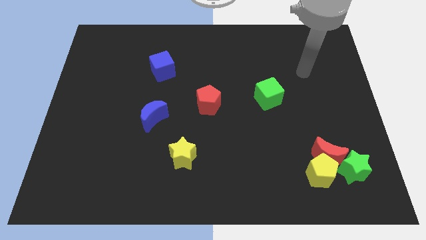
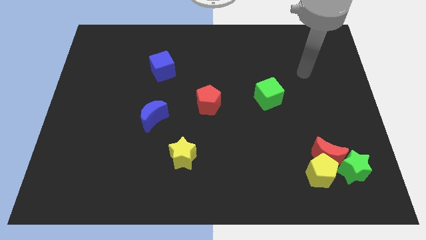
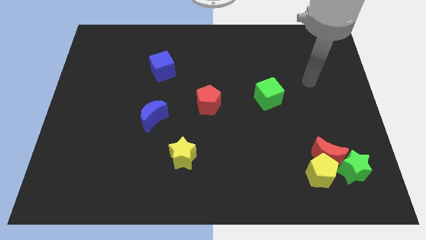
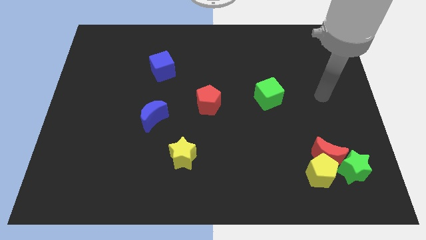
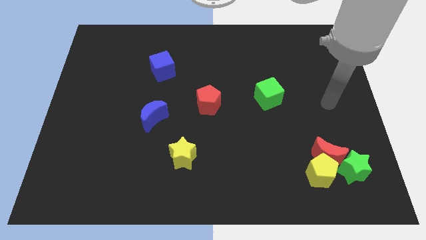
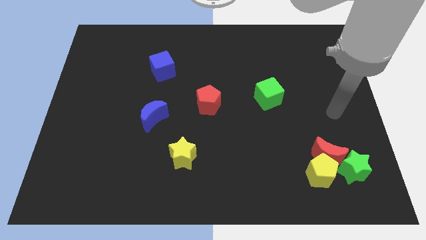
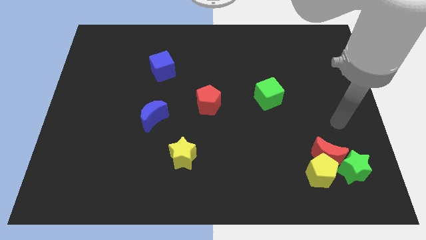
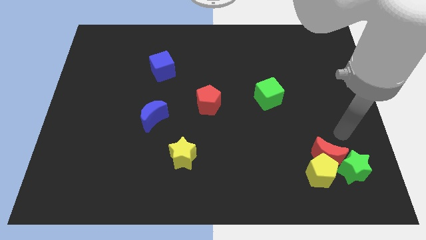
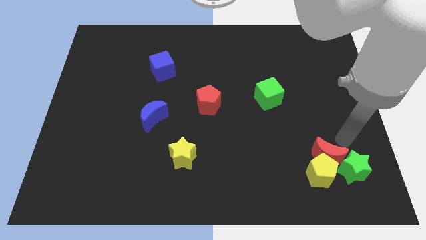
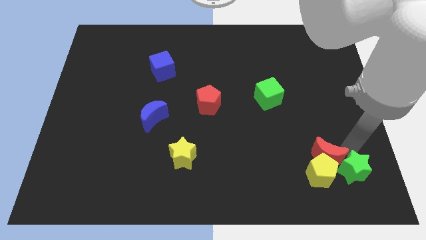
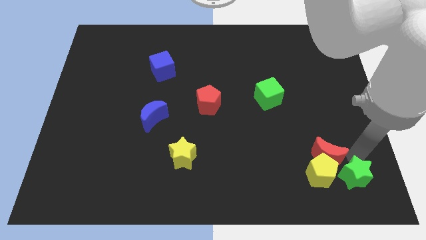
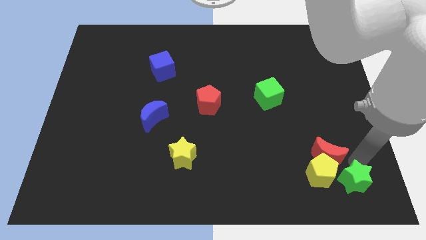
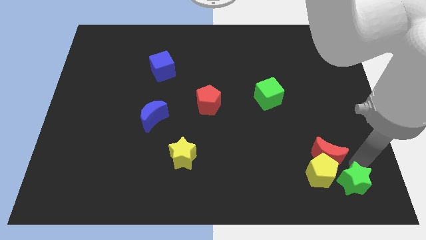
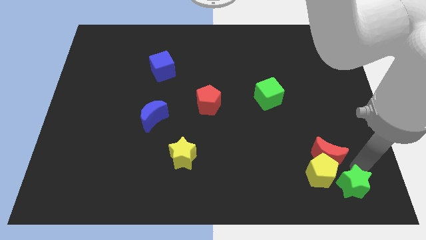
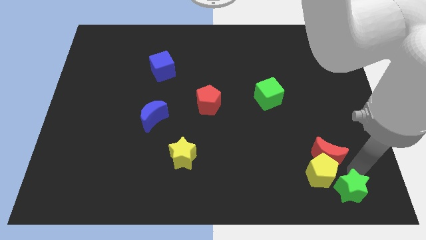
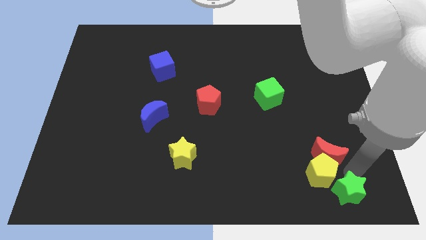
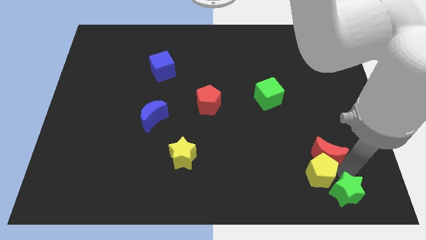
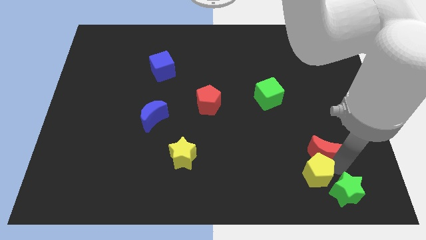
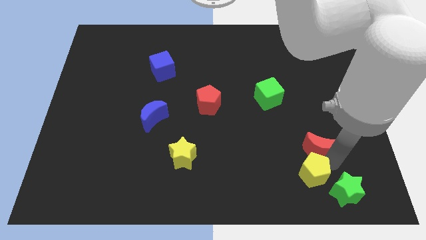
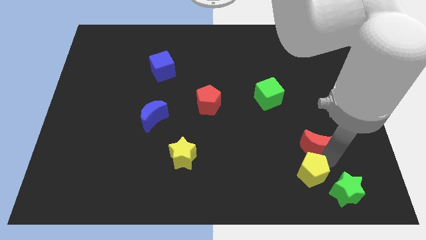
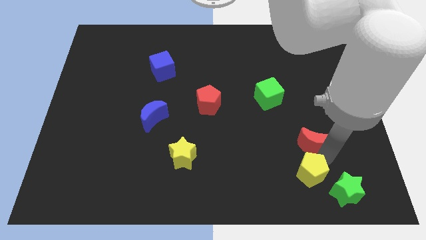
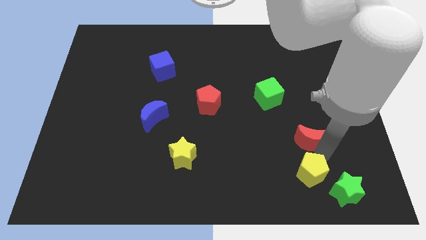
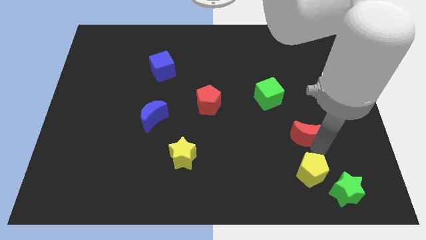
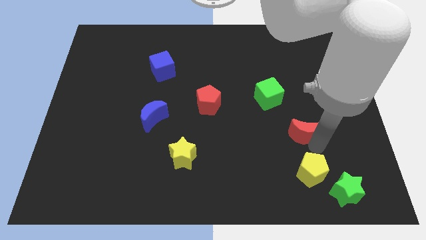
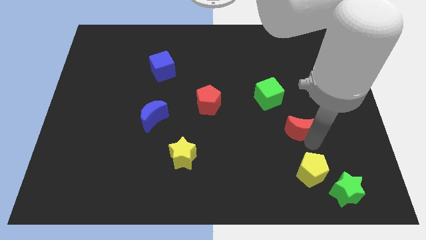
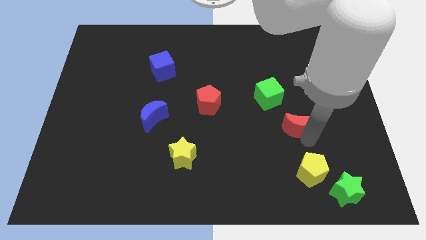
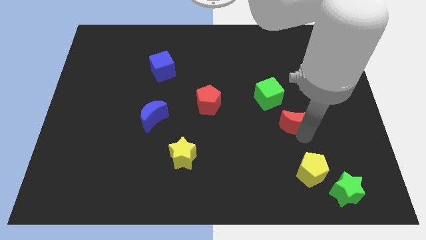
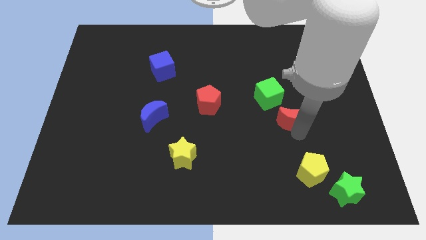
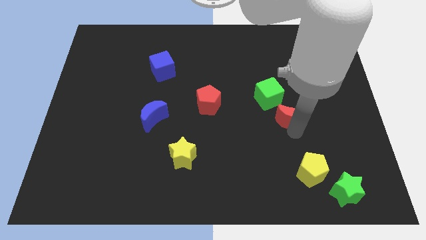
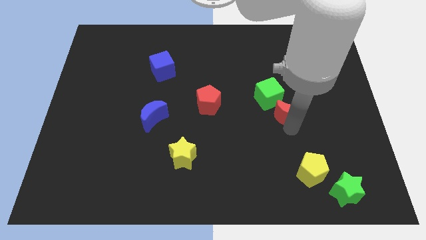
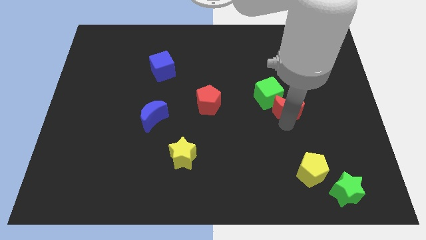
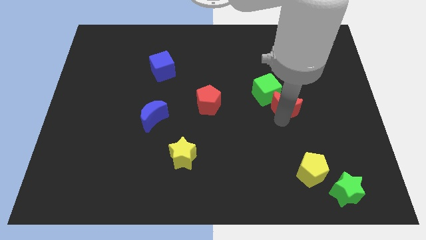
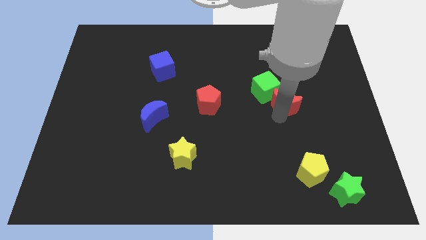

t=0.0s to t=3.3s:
slide the red moon towards the green cube

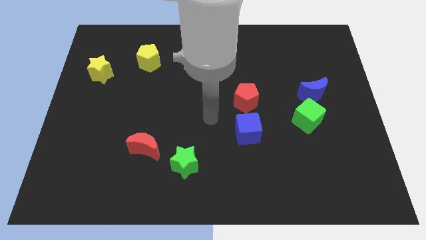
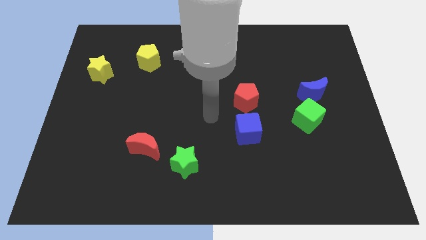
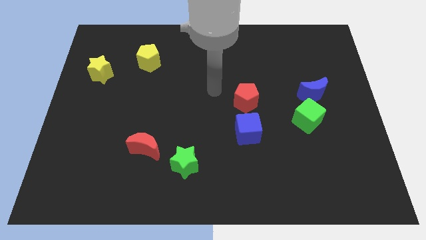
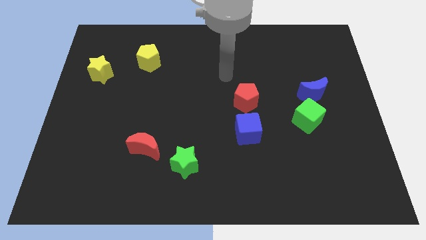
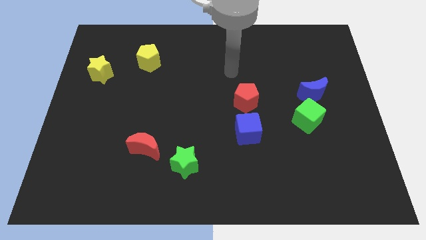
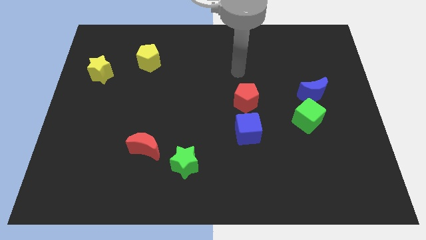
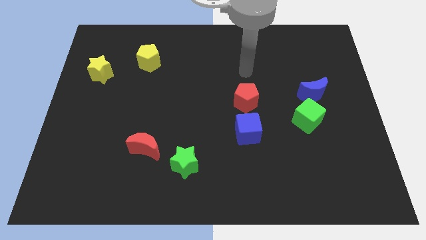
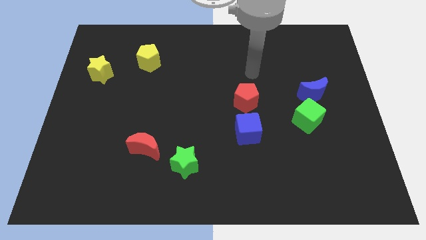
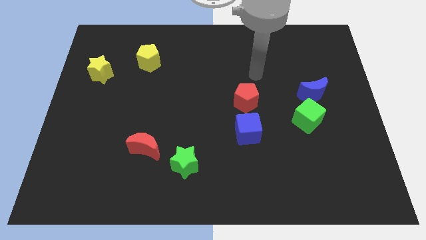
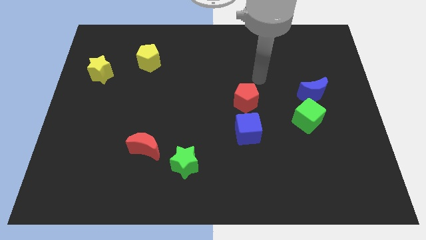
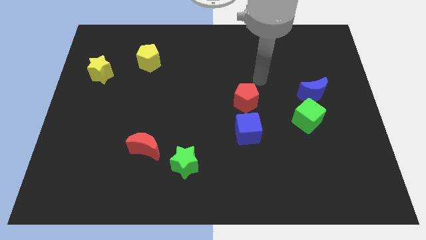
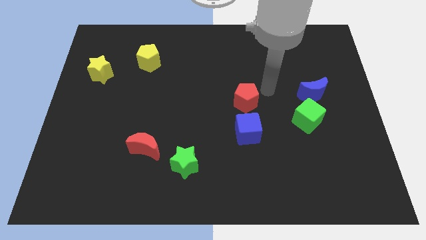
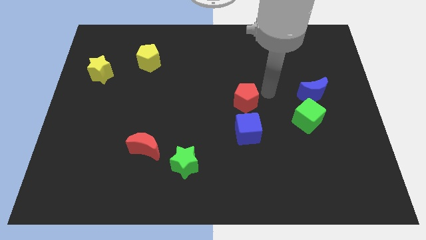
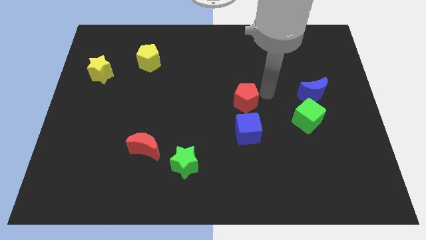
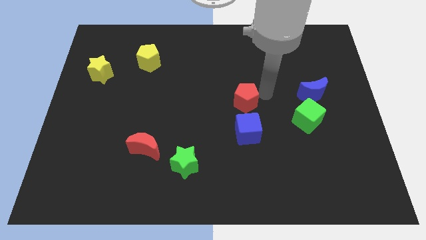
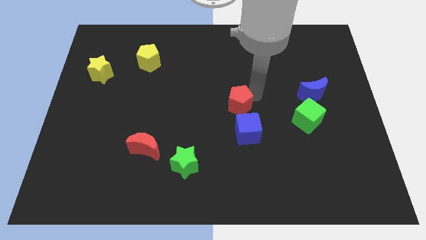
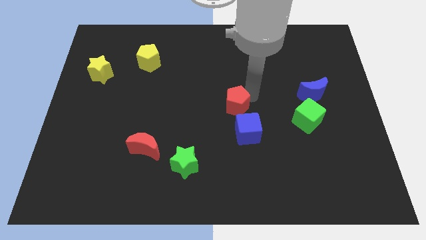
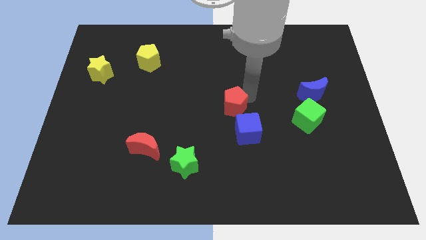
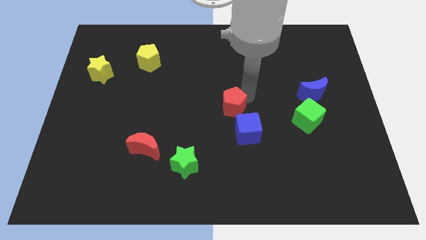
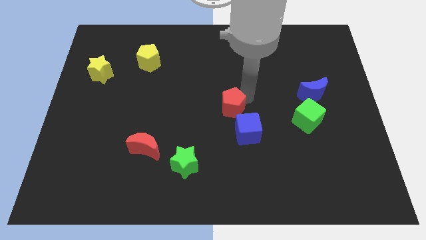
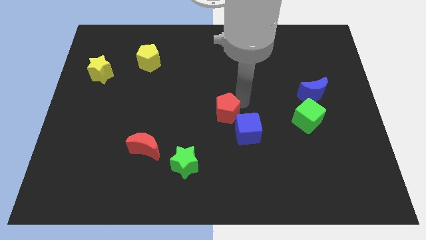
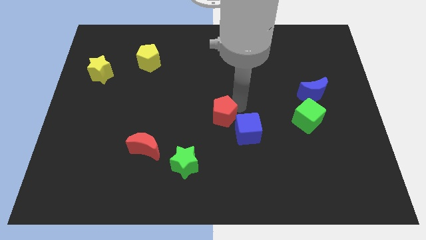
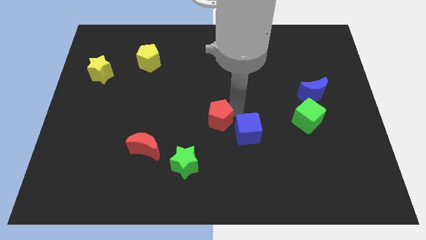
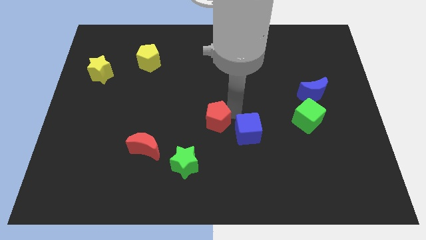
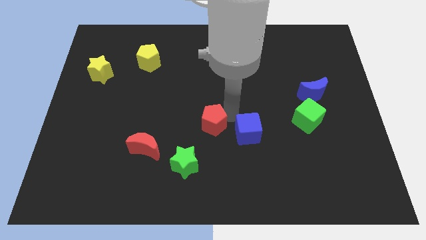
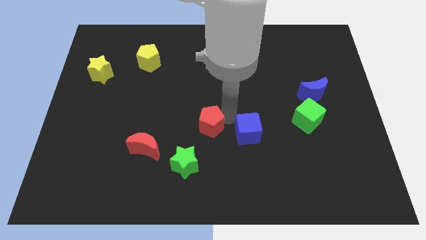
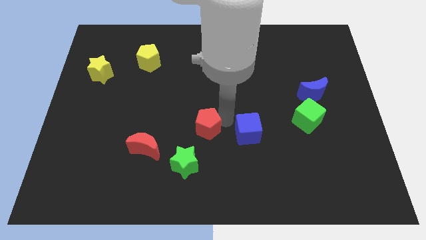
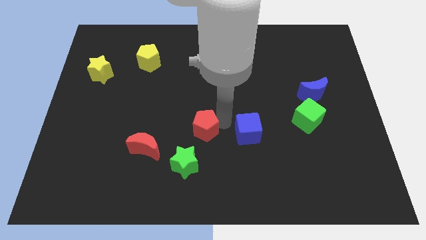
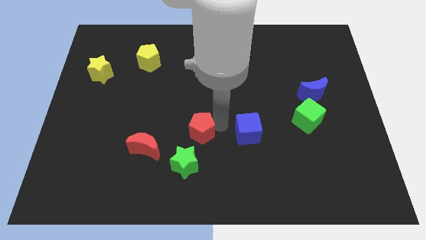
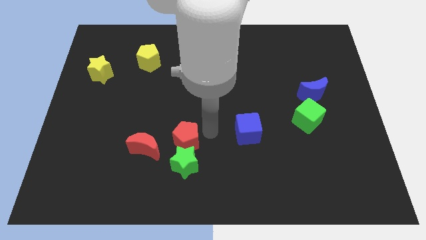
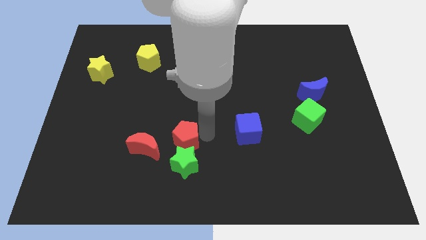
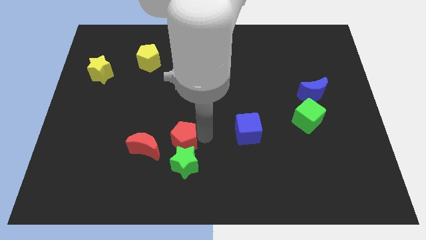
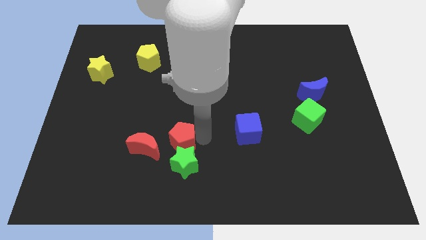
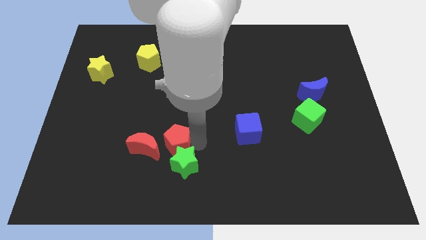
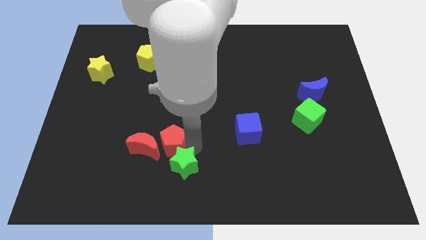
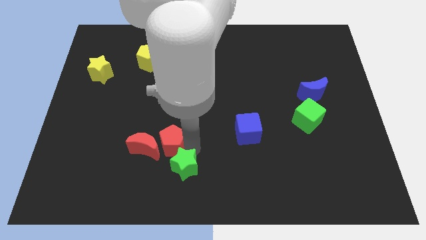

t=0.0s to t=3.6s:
move the red pentagon to the red moon

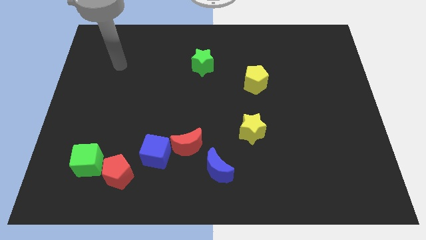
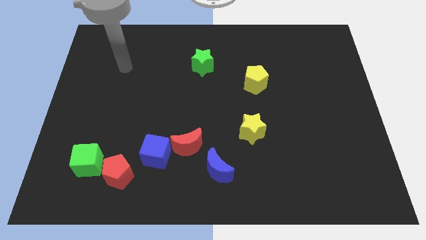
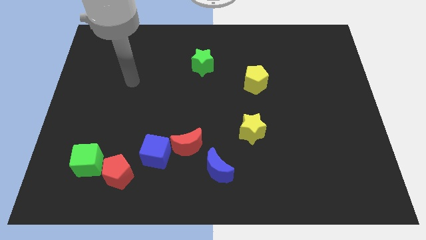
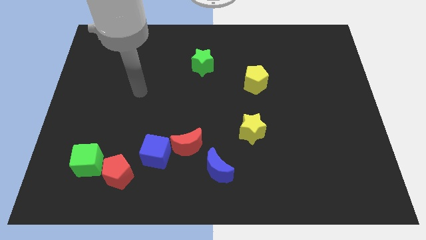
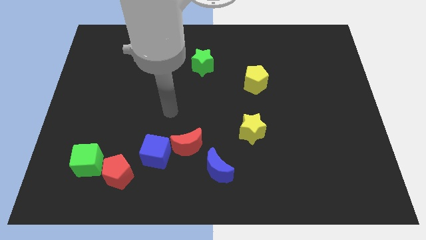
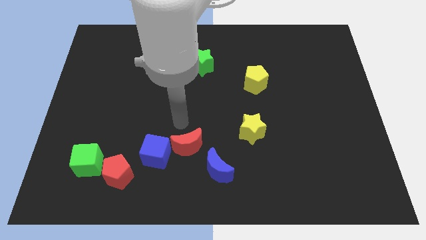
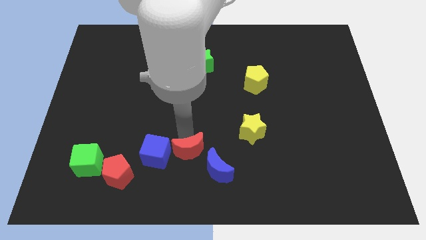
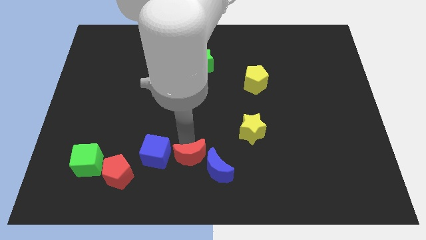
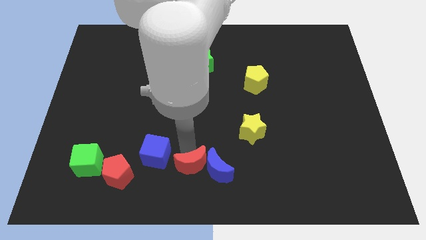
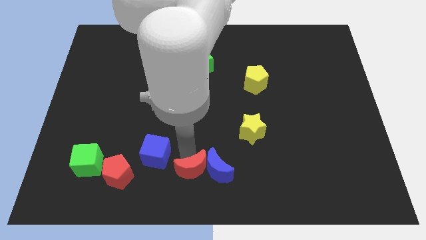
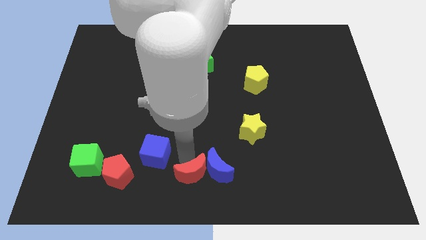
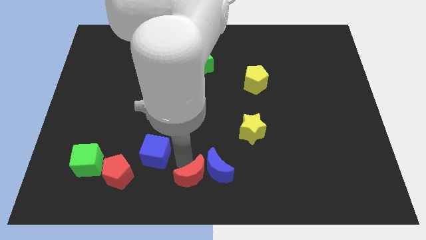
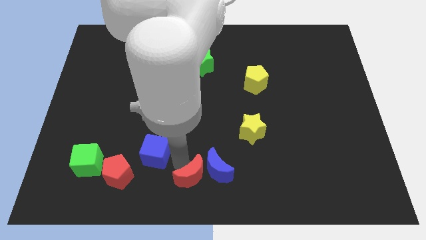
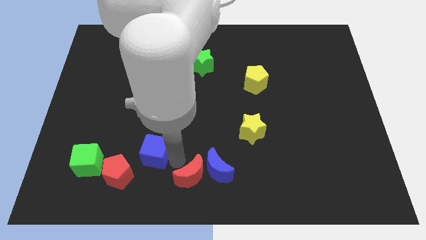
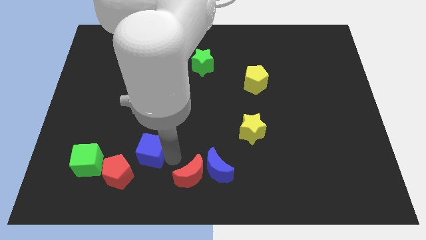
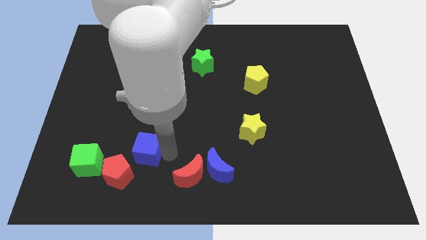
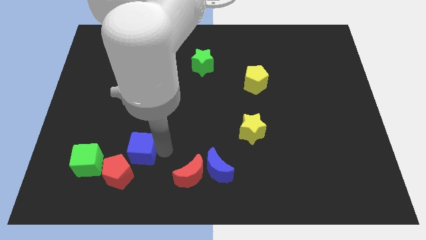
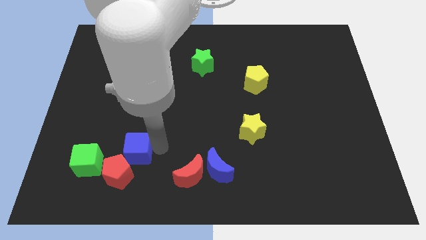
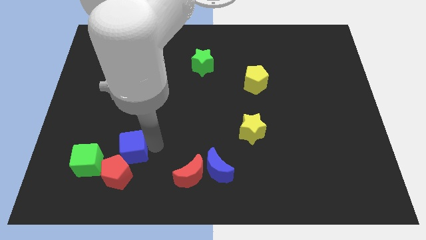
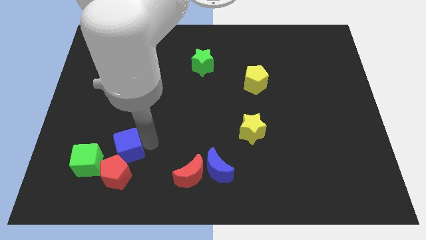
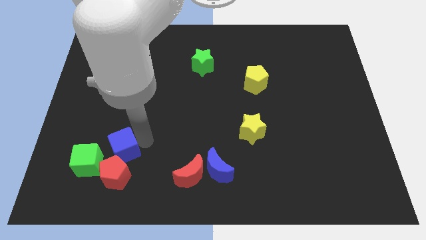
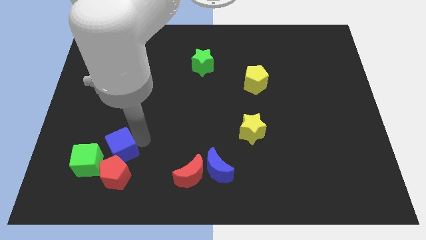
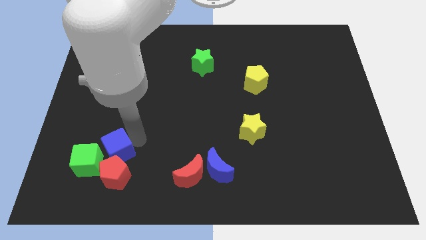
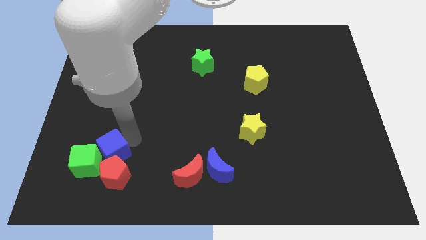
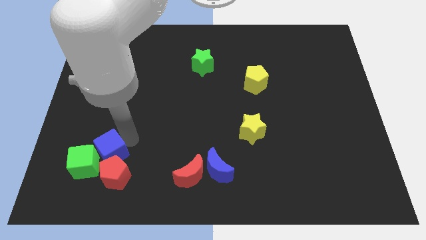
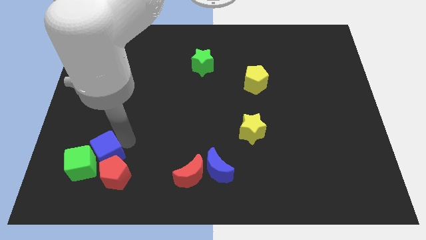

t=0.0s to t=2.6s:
push the blue cube towards the green cube
